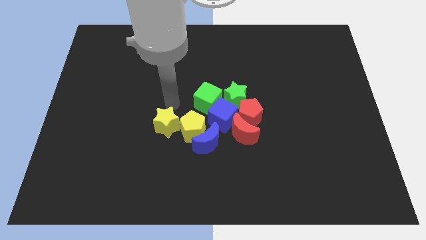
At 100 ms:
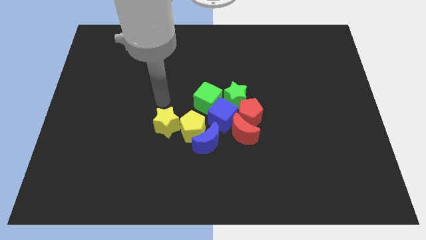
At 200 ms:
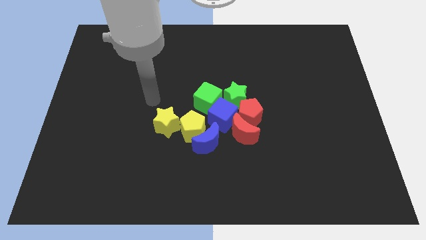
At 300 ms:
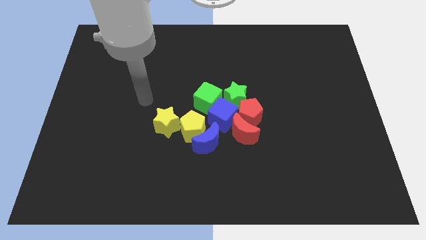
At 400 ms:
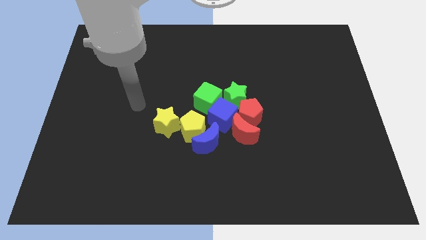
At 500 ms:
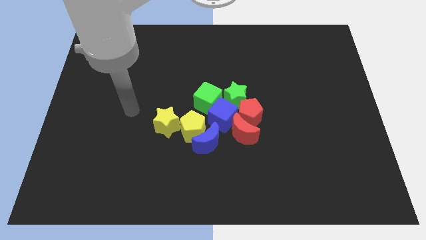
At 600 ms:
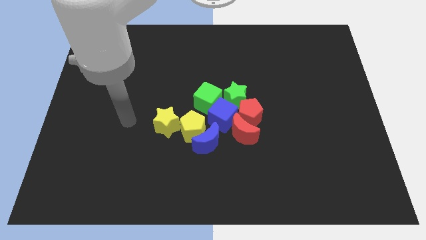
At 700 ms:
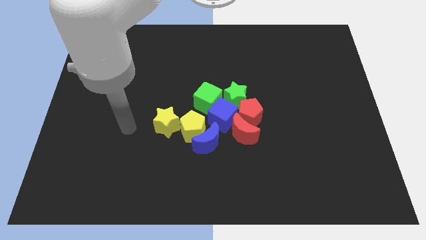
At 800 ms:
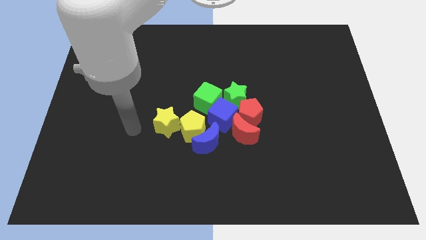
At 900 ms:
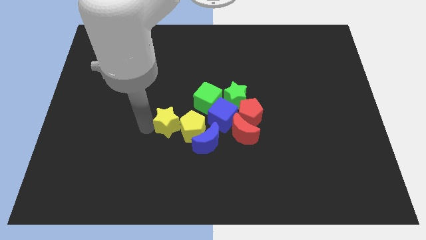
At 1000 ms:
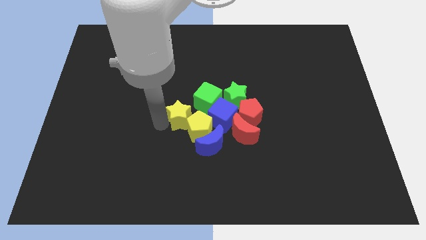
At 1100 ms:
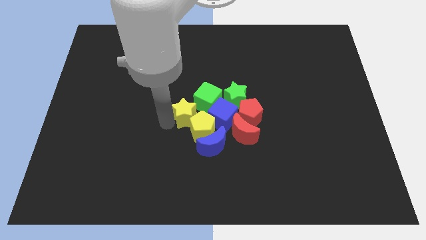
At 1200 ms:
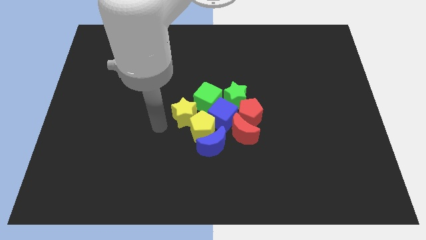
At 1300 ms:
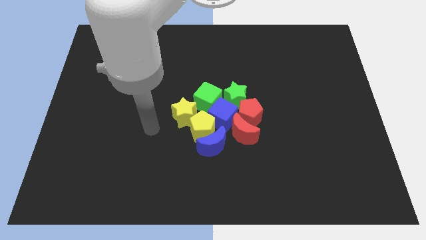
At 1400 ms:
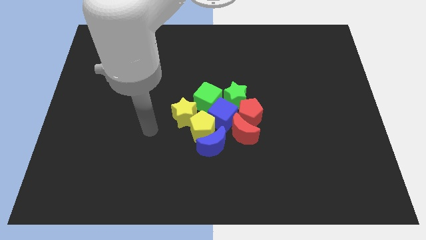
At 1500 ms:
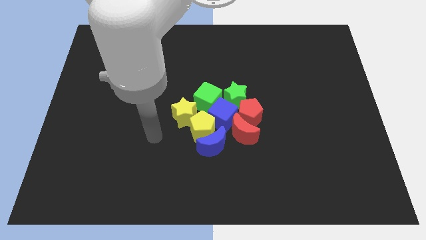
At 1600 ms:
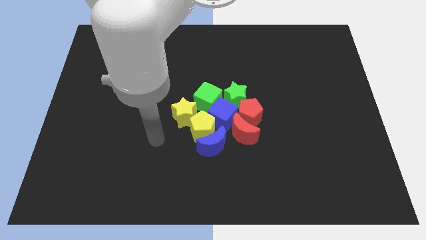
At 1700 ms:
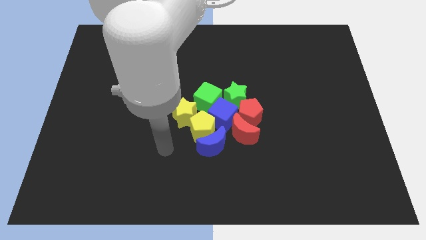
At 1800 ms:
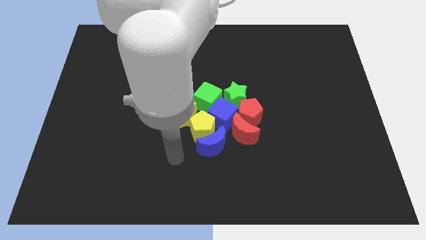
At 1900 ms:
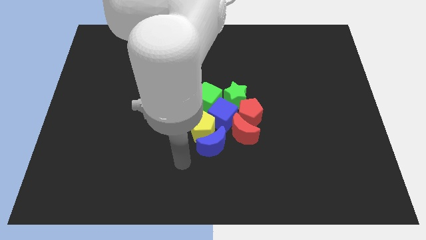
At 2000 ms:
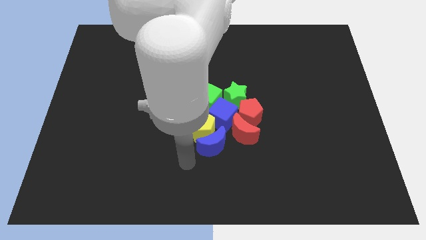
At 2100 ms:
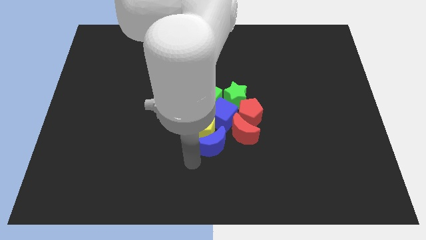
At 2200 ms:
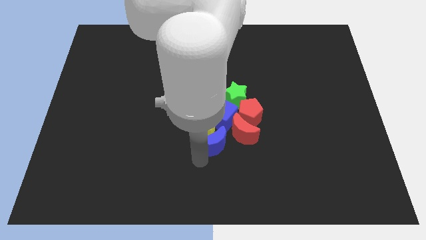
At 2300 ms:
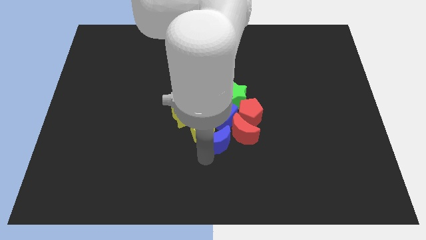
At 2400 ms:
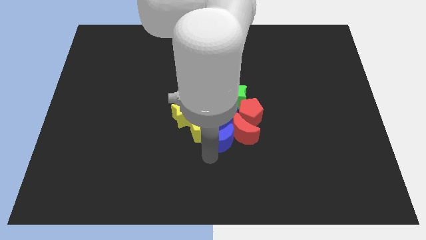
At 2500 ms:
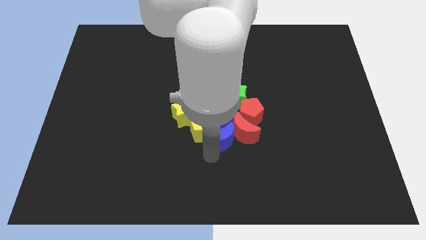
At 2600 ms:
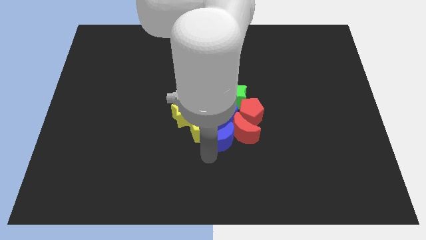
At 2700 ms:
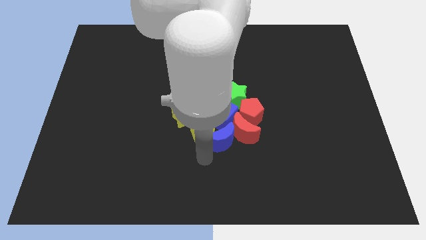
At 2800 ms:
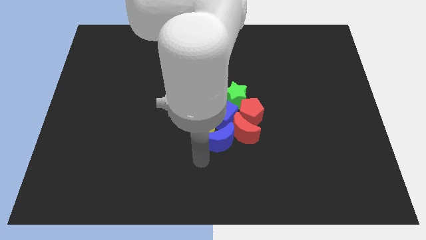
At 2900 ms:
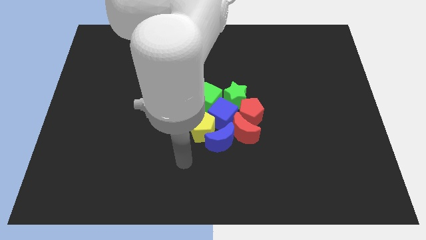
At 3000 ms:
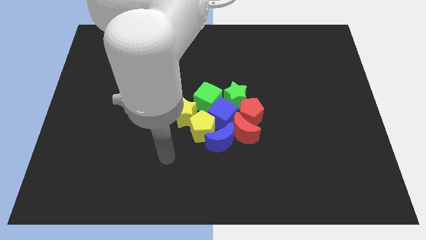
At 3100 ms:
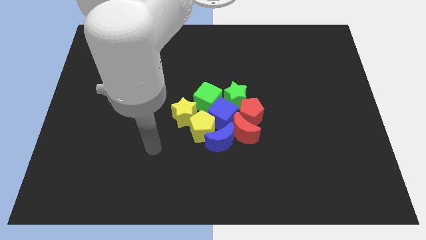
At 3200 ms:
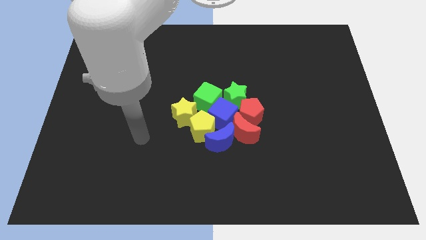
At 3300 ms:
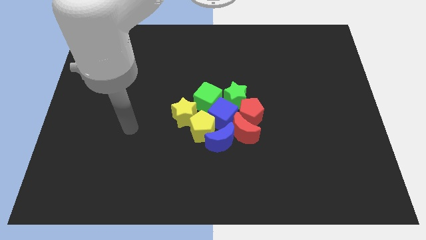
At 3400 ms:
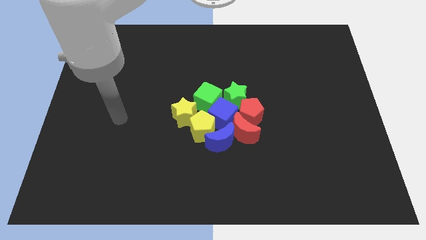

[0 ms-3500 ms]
adjust the blocks in the group at the center

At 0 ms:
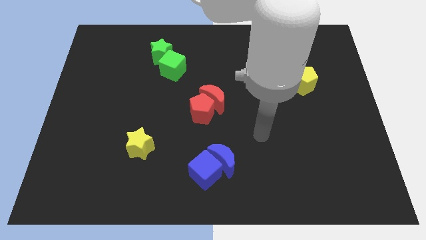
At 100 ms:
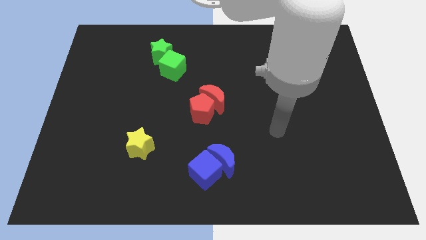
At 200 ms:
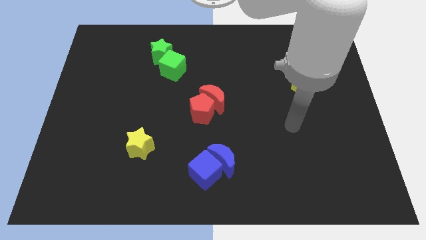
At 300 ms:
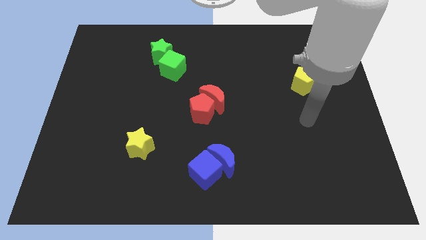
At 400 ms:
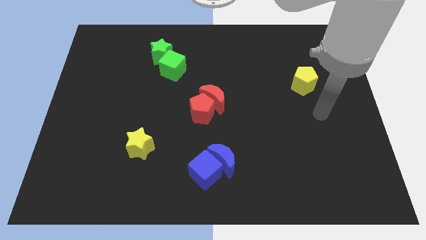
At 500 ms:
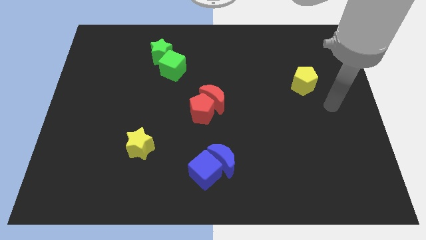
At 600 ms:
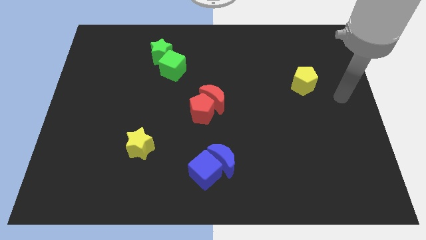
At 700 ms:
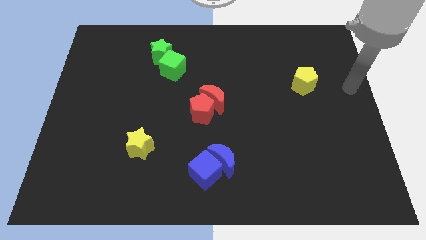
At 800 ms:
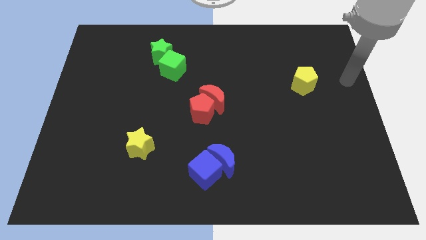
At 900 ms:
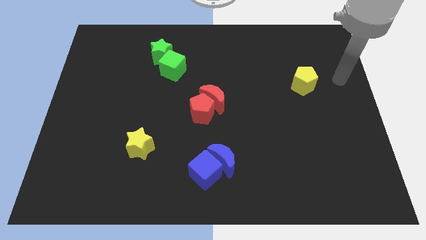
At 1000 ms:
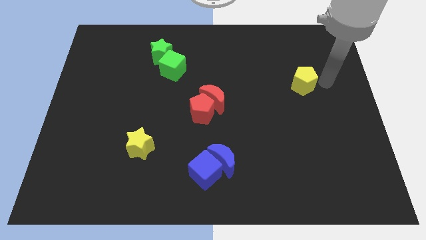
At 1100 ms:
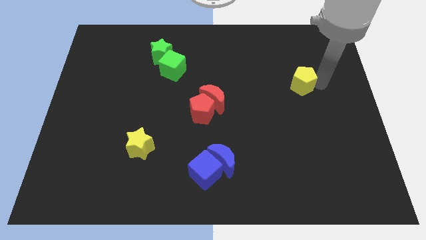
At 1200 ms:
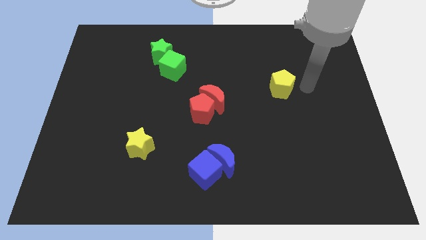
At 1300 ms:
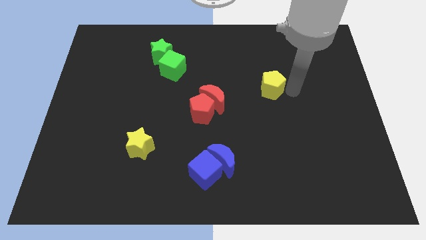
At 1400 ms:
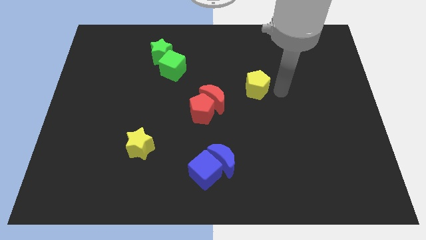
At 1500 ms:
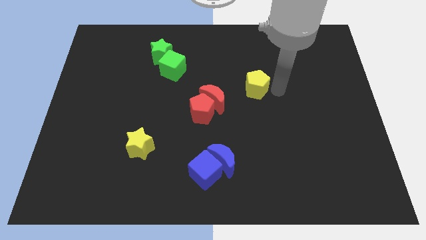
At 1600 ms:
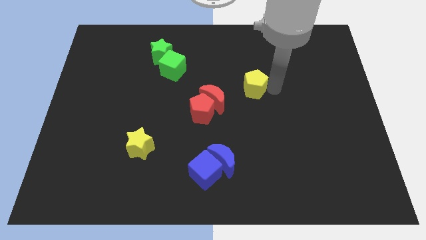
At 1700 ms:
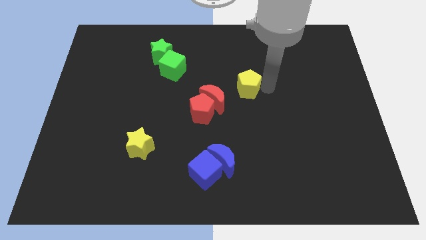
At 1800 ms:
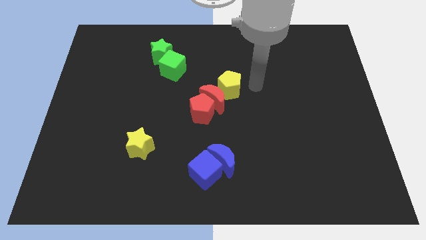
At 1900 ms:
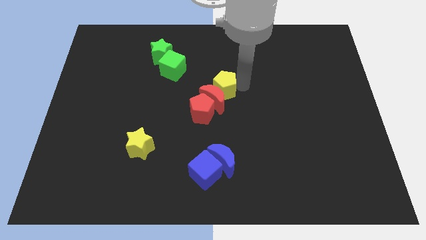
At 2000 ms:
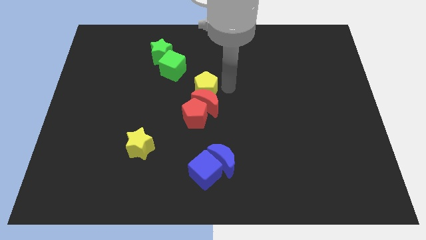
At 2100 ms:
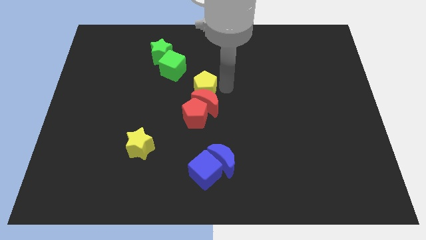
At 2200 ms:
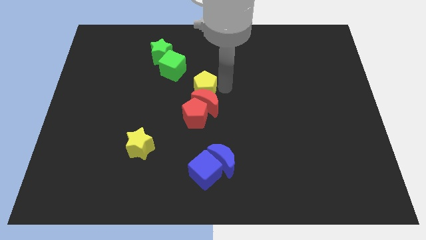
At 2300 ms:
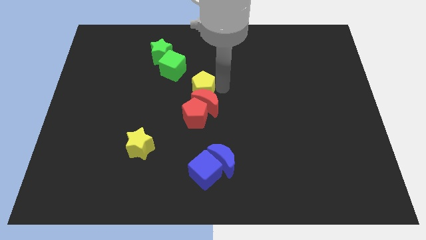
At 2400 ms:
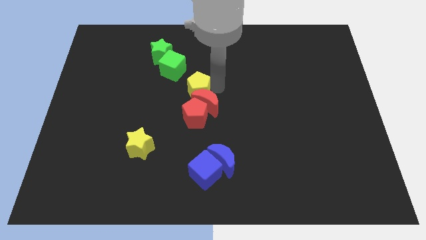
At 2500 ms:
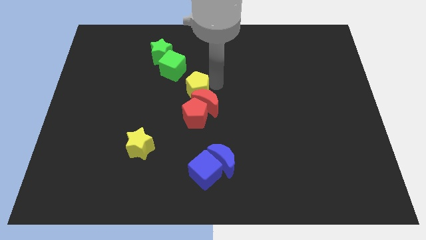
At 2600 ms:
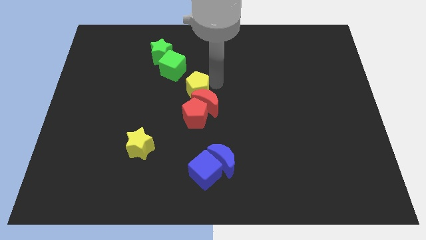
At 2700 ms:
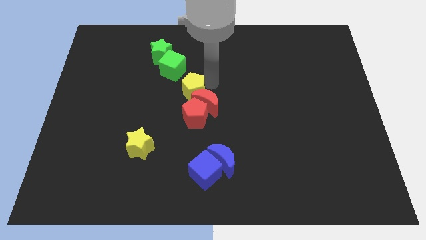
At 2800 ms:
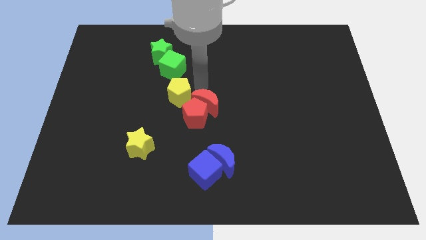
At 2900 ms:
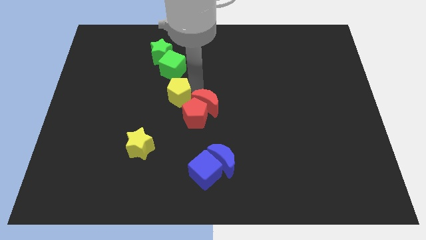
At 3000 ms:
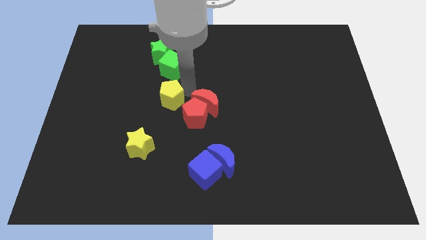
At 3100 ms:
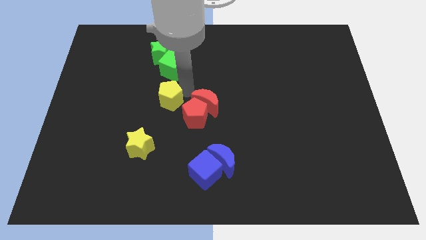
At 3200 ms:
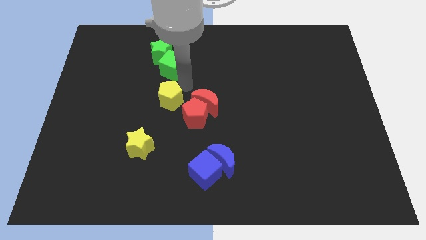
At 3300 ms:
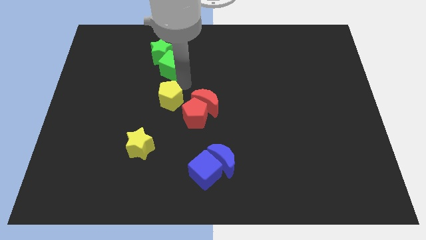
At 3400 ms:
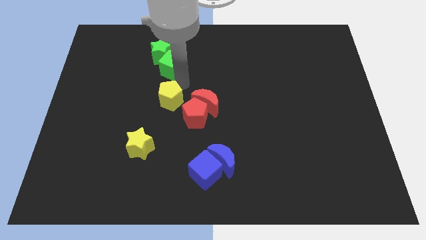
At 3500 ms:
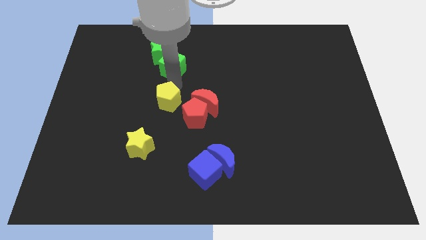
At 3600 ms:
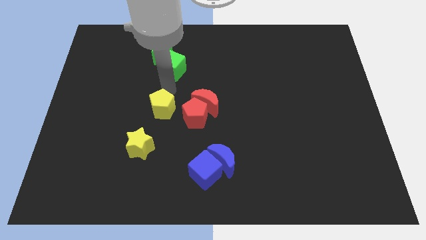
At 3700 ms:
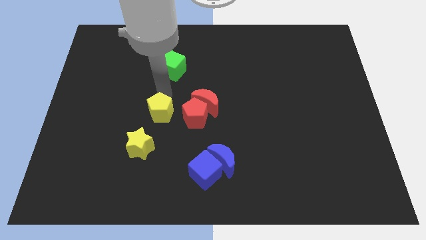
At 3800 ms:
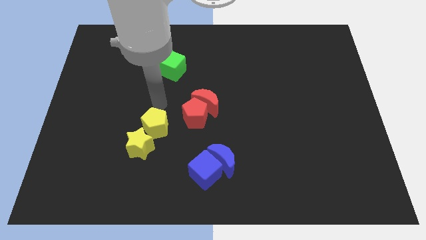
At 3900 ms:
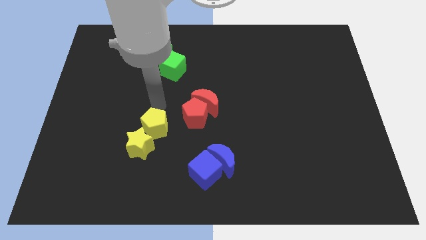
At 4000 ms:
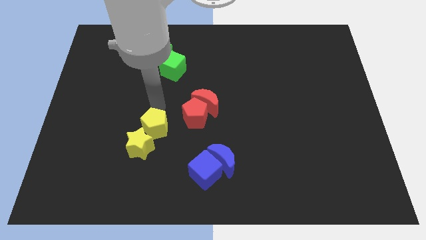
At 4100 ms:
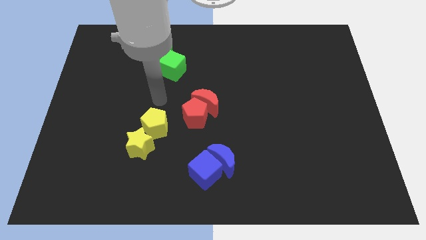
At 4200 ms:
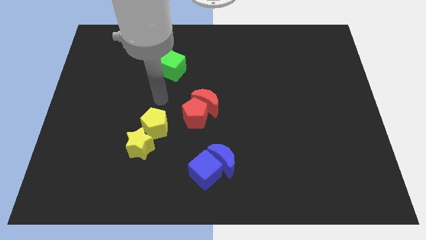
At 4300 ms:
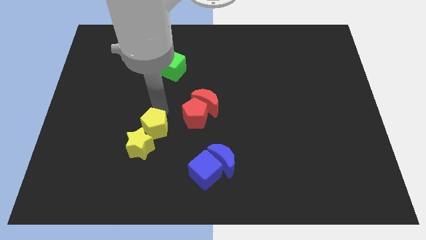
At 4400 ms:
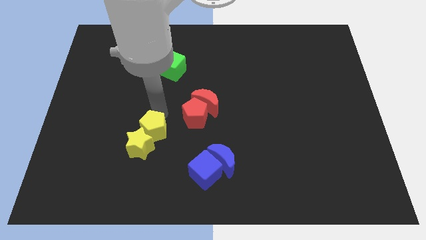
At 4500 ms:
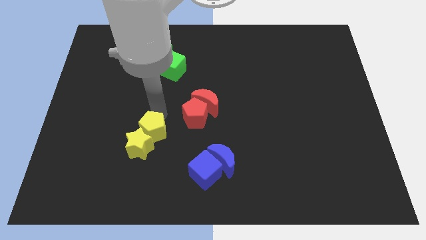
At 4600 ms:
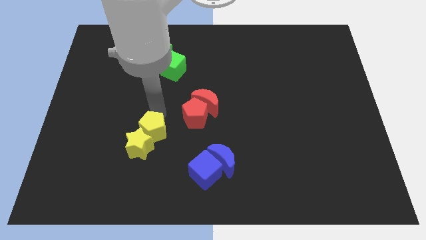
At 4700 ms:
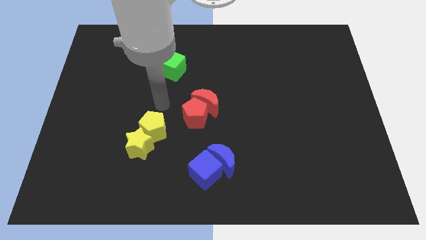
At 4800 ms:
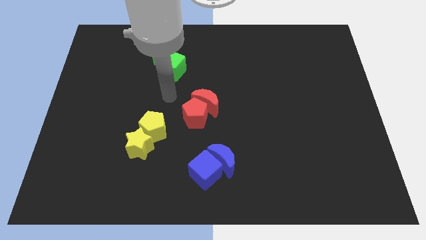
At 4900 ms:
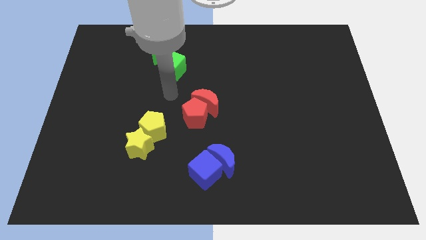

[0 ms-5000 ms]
place the yellow pentagon towards the yellow star

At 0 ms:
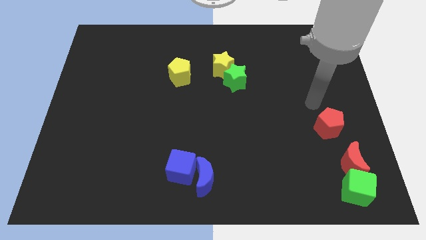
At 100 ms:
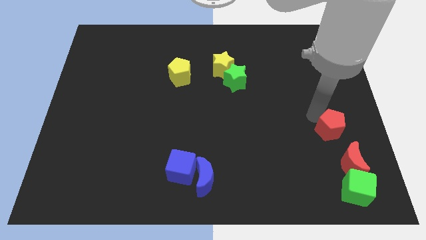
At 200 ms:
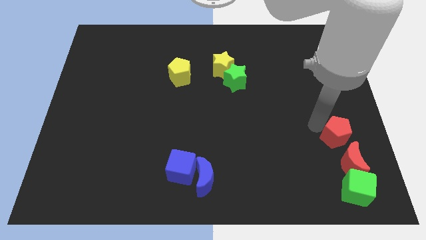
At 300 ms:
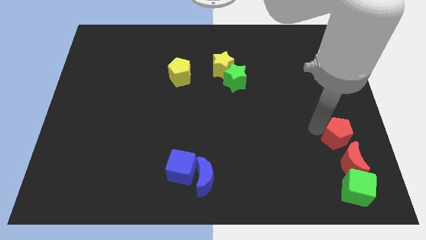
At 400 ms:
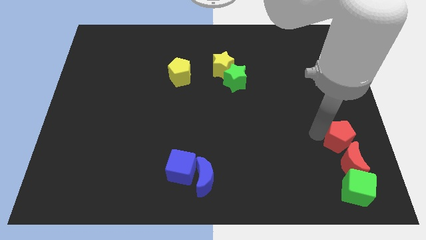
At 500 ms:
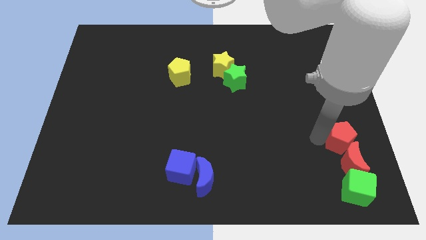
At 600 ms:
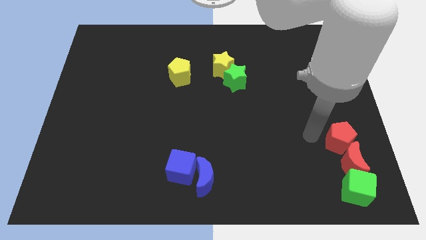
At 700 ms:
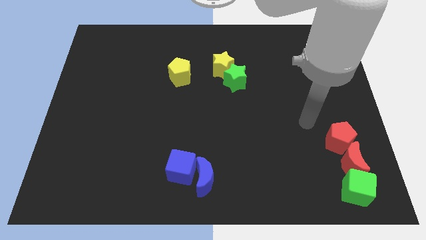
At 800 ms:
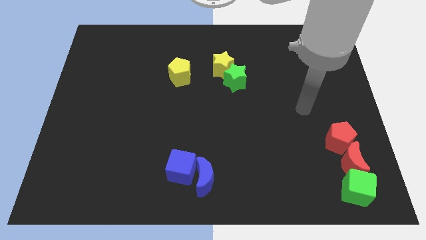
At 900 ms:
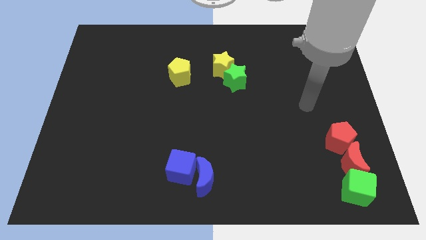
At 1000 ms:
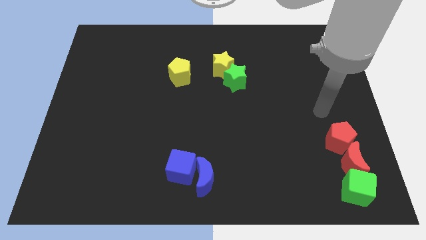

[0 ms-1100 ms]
slightly push the red pentagon into the red crescent
